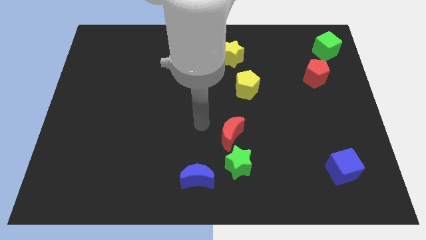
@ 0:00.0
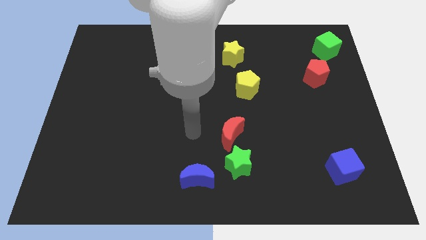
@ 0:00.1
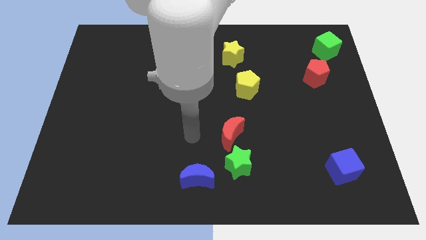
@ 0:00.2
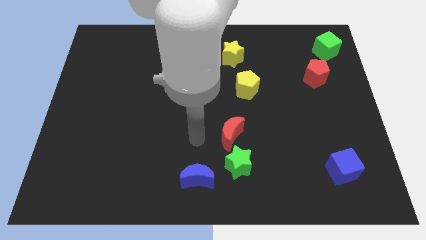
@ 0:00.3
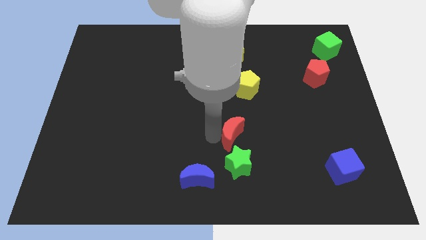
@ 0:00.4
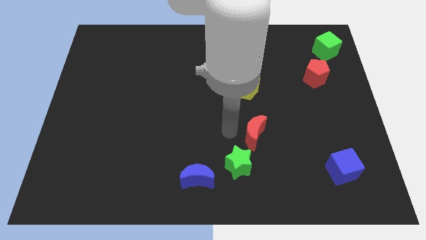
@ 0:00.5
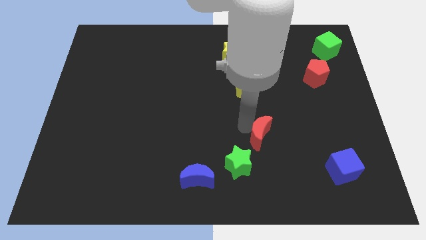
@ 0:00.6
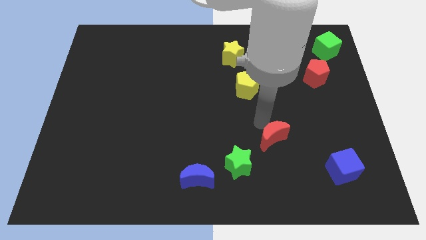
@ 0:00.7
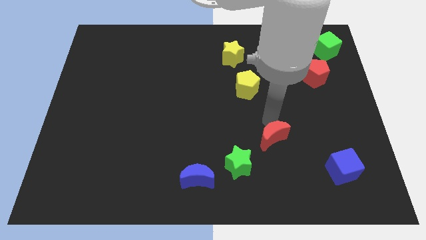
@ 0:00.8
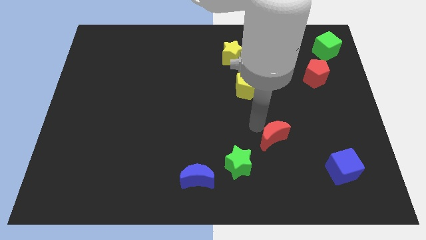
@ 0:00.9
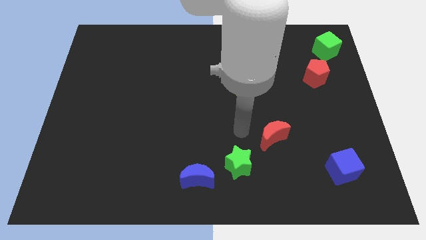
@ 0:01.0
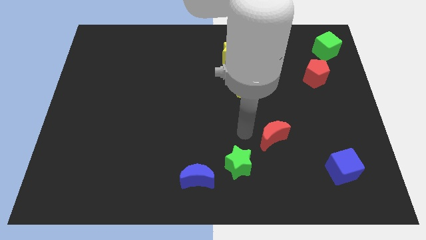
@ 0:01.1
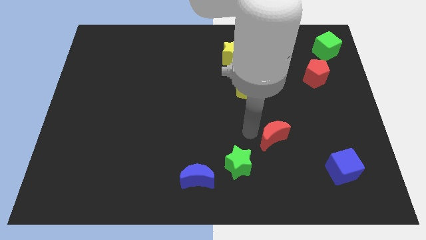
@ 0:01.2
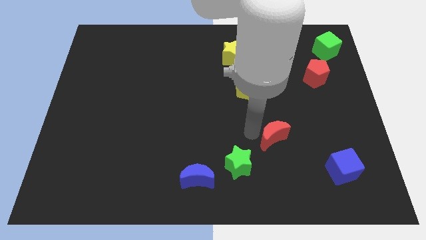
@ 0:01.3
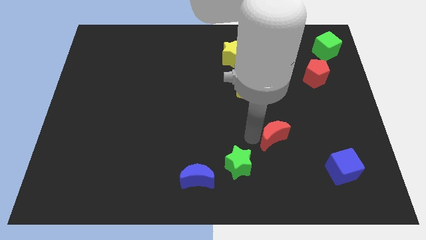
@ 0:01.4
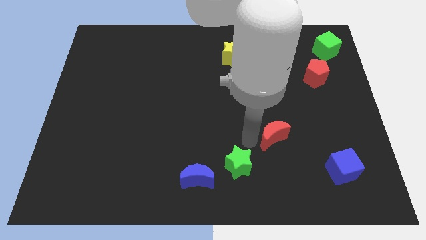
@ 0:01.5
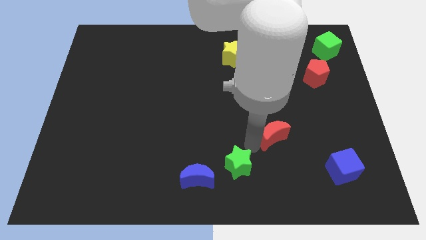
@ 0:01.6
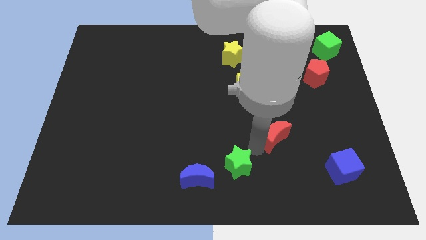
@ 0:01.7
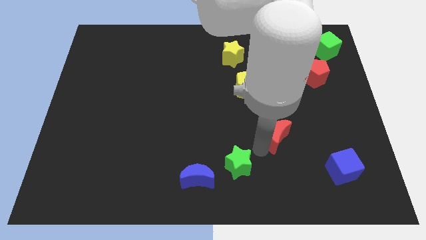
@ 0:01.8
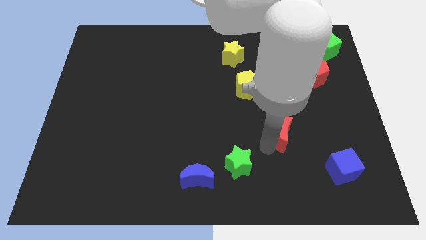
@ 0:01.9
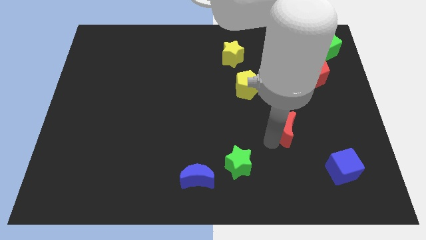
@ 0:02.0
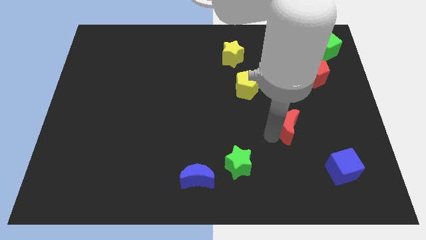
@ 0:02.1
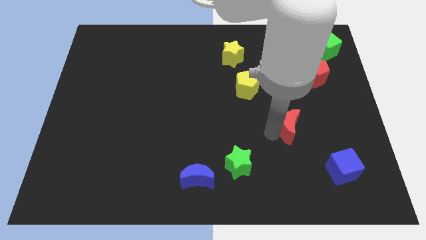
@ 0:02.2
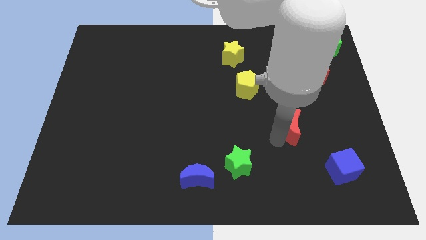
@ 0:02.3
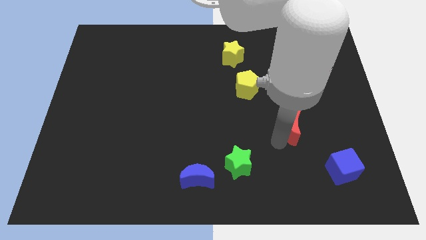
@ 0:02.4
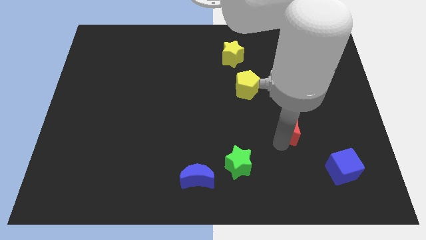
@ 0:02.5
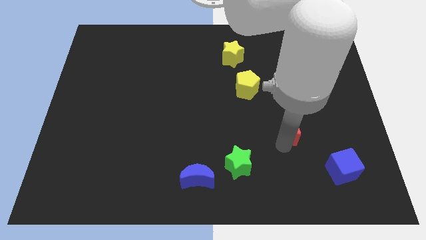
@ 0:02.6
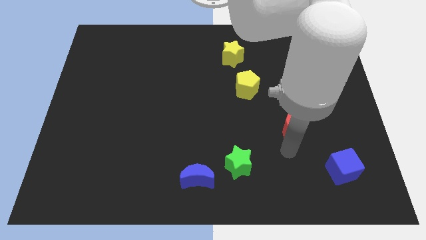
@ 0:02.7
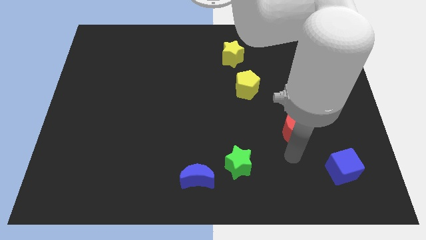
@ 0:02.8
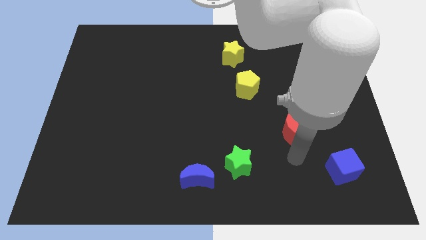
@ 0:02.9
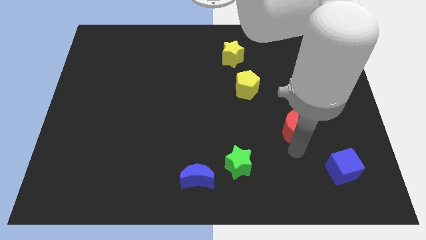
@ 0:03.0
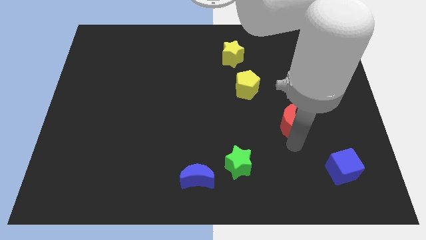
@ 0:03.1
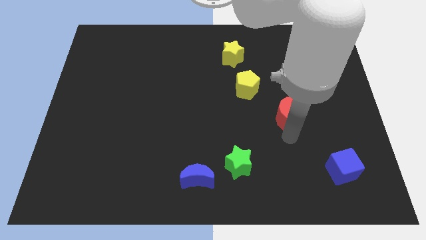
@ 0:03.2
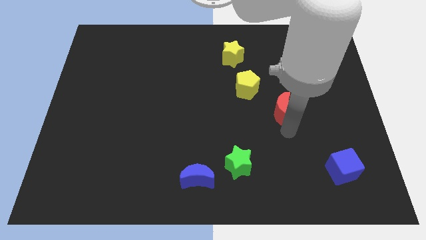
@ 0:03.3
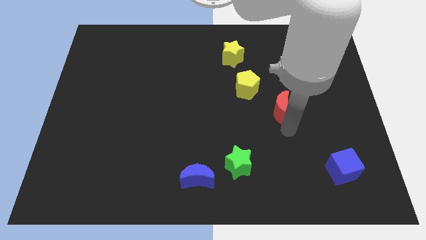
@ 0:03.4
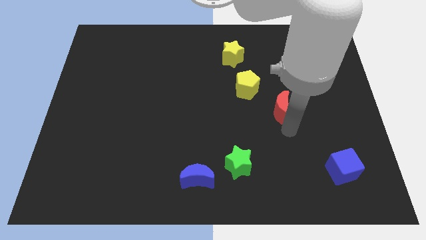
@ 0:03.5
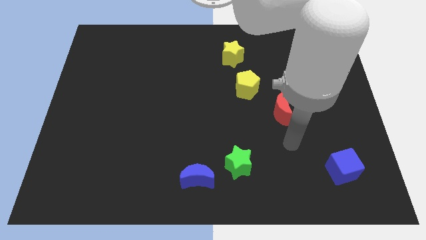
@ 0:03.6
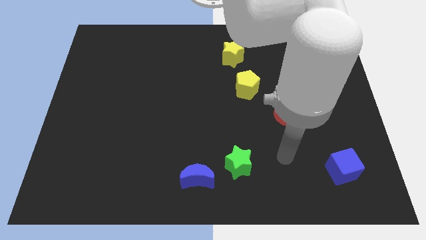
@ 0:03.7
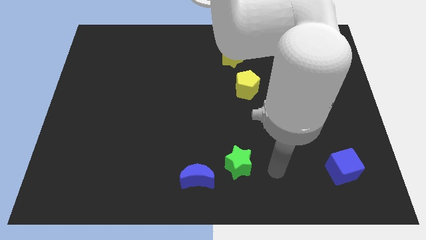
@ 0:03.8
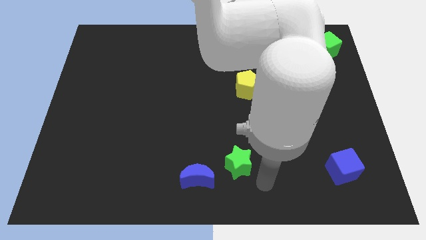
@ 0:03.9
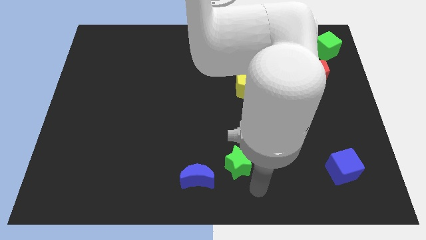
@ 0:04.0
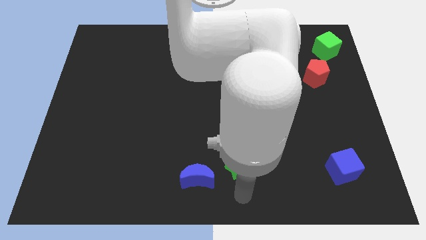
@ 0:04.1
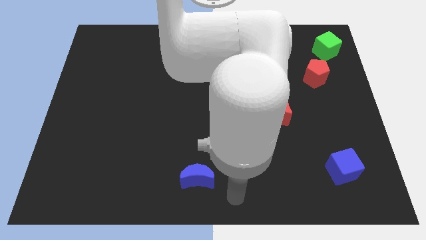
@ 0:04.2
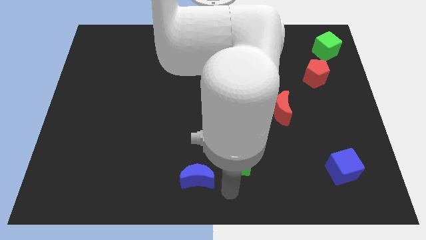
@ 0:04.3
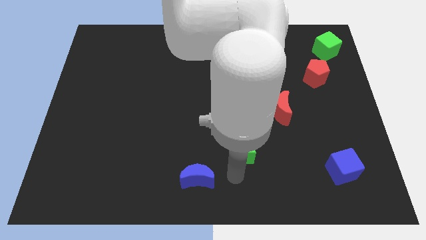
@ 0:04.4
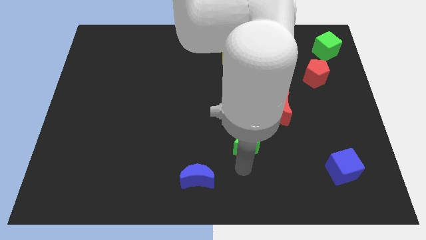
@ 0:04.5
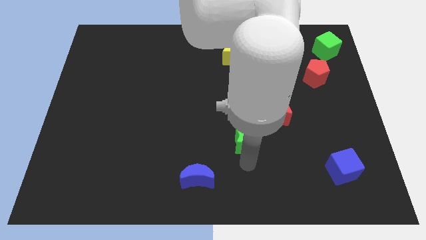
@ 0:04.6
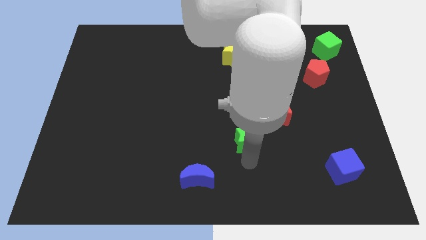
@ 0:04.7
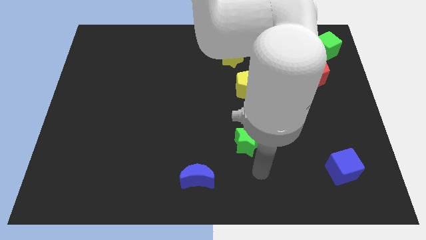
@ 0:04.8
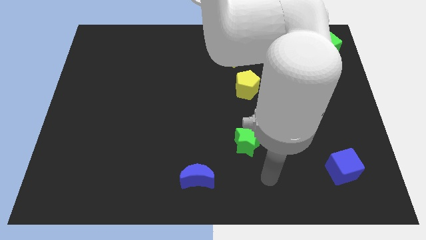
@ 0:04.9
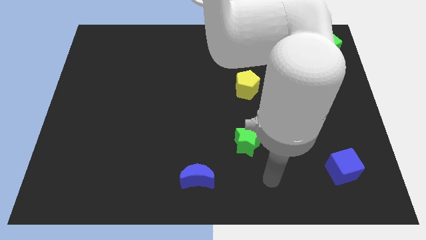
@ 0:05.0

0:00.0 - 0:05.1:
put the red moon diagonally bottom left of the red pentagon

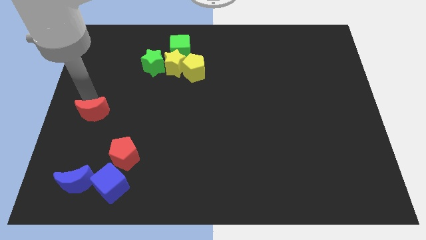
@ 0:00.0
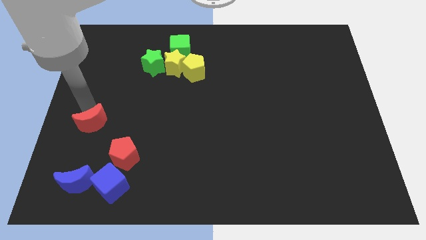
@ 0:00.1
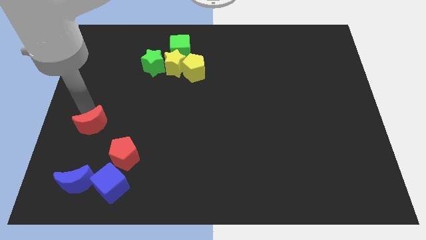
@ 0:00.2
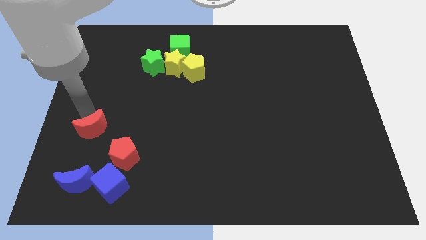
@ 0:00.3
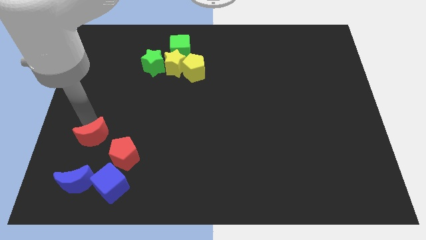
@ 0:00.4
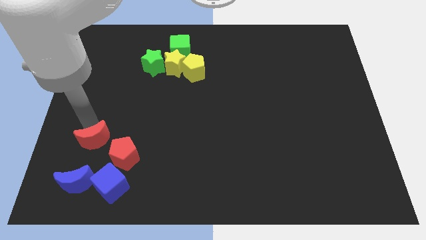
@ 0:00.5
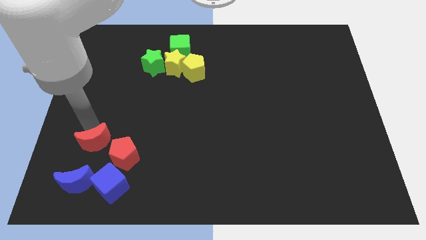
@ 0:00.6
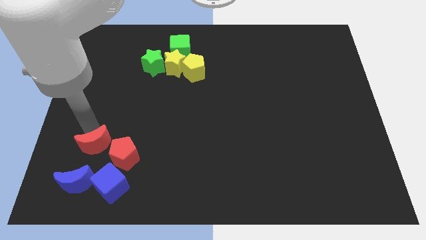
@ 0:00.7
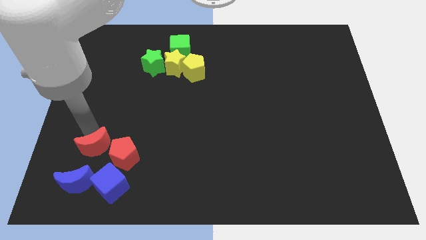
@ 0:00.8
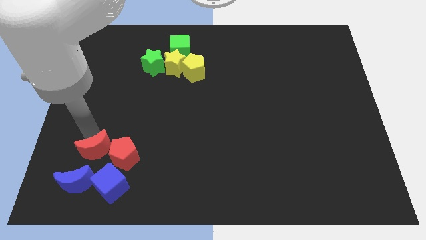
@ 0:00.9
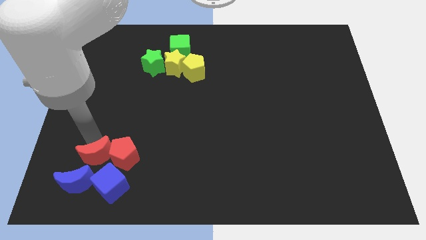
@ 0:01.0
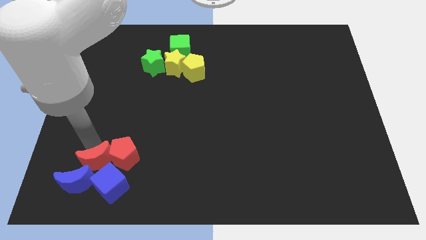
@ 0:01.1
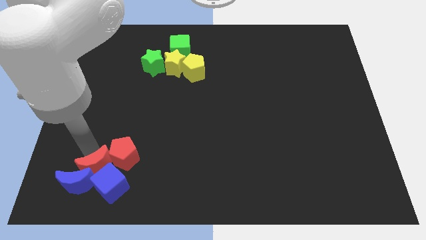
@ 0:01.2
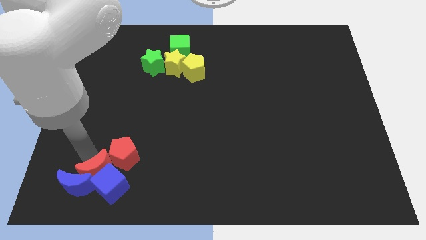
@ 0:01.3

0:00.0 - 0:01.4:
add the red moon to the group of both the blue blocks and red pentagon

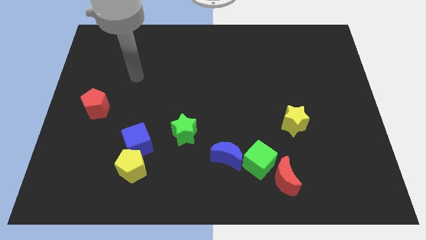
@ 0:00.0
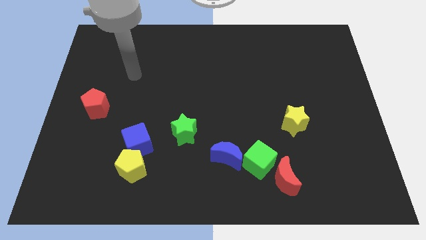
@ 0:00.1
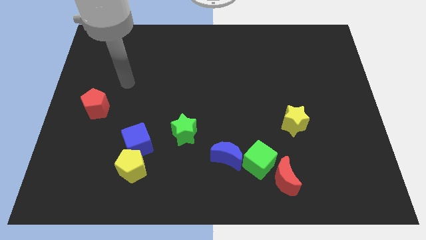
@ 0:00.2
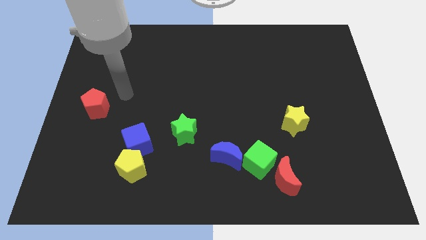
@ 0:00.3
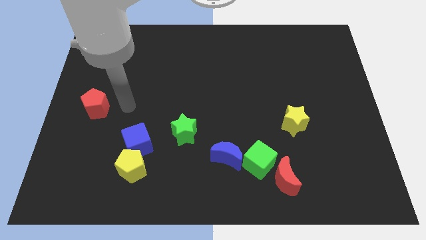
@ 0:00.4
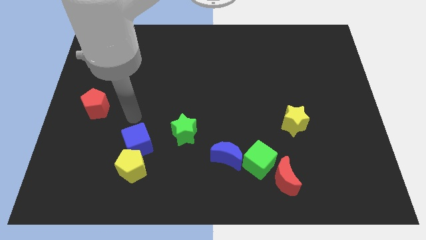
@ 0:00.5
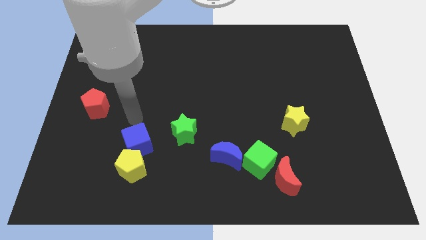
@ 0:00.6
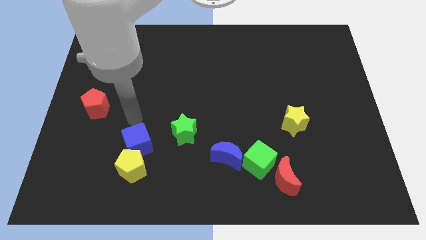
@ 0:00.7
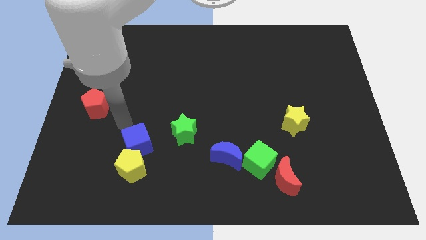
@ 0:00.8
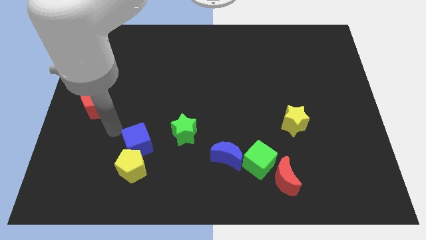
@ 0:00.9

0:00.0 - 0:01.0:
go near the blue cube

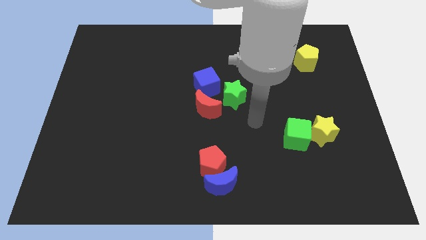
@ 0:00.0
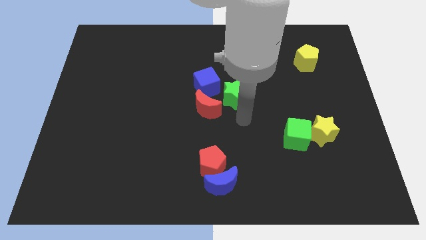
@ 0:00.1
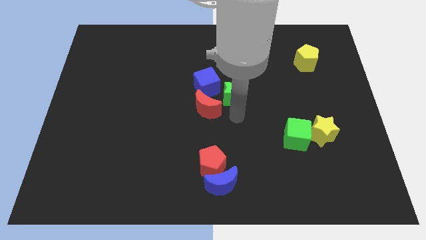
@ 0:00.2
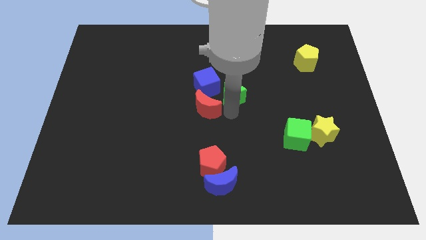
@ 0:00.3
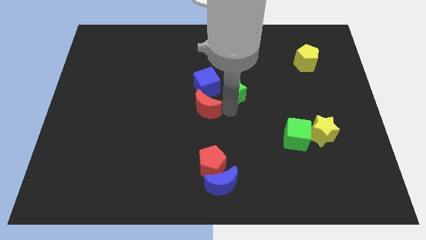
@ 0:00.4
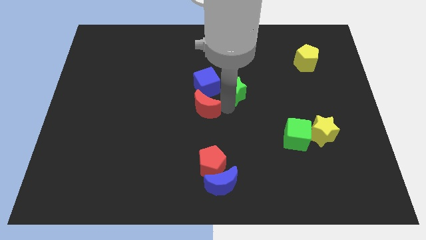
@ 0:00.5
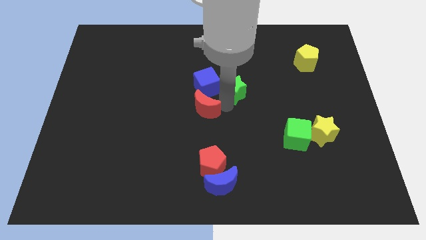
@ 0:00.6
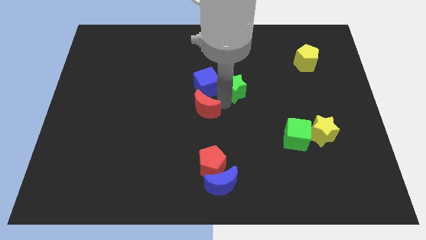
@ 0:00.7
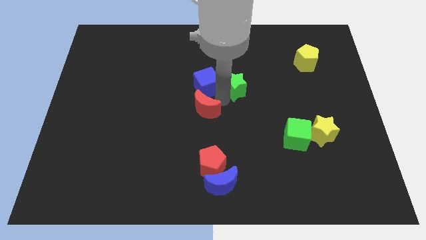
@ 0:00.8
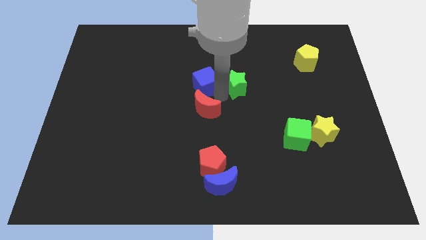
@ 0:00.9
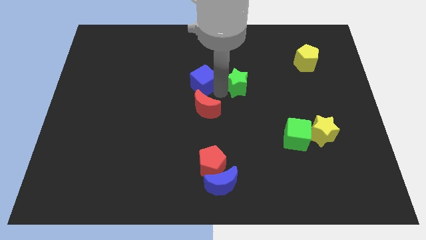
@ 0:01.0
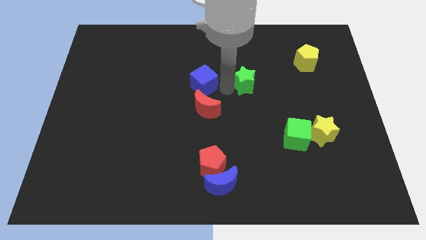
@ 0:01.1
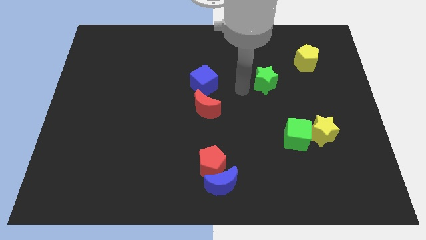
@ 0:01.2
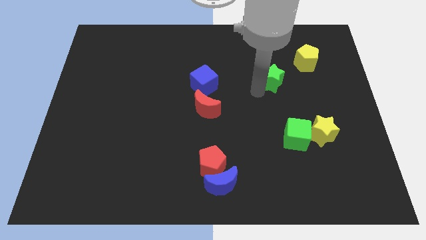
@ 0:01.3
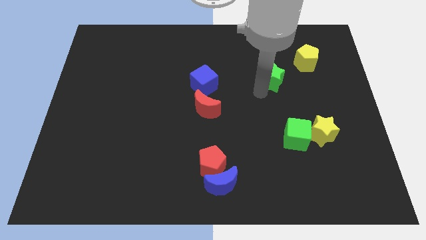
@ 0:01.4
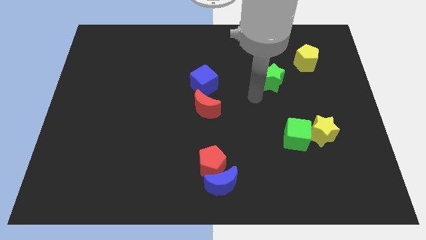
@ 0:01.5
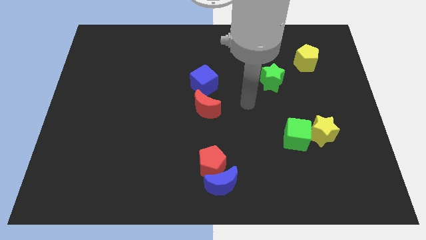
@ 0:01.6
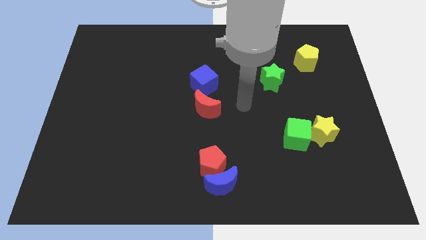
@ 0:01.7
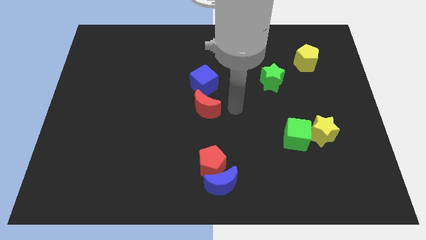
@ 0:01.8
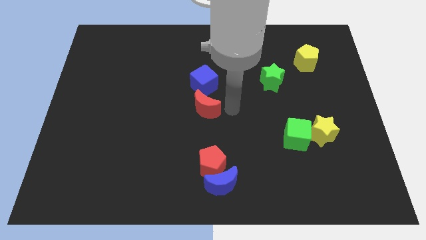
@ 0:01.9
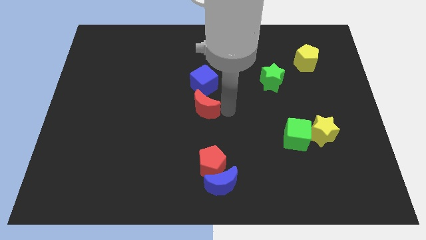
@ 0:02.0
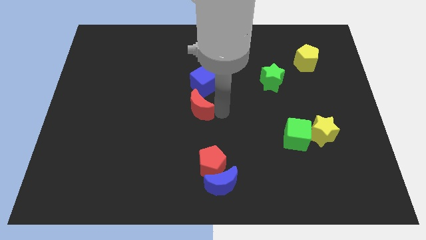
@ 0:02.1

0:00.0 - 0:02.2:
move the green star diagonally to red pentagon
